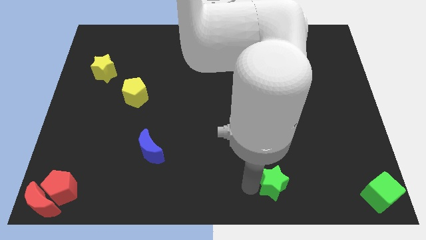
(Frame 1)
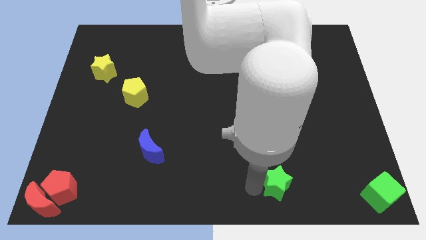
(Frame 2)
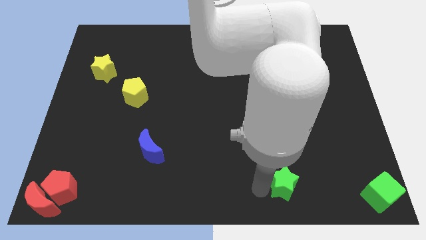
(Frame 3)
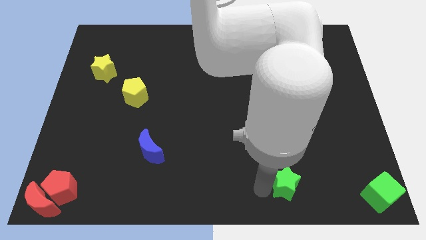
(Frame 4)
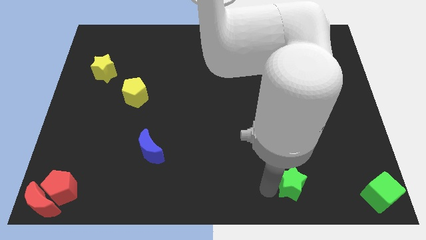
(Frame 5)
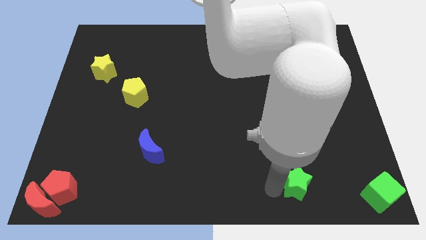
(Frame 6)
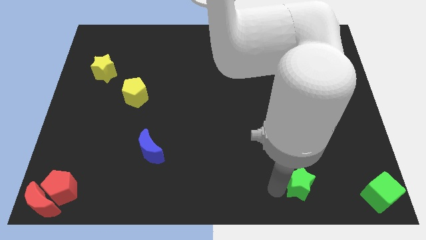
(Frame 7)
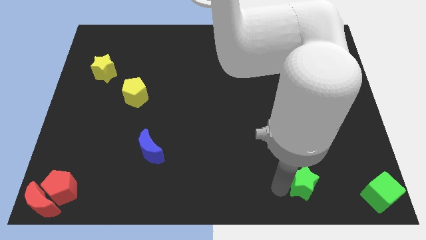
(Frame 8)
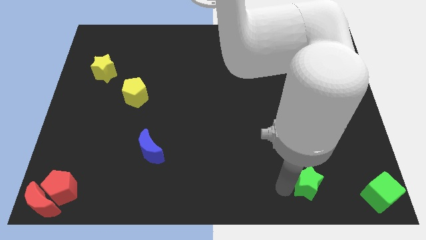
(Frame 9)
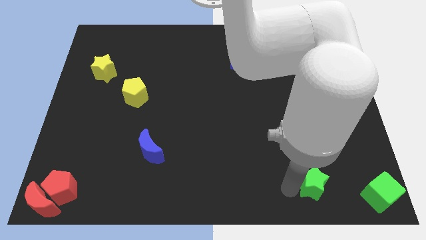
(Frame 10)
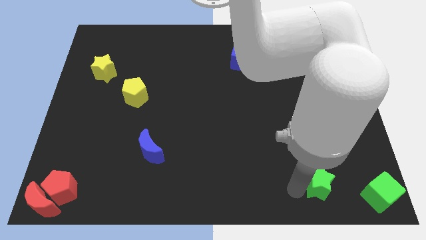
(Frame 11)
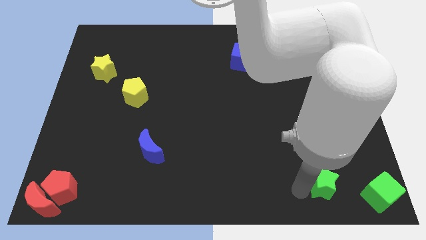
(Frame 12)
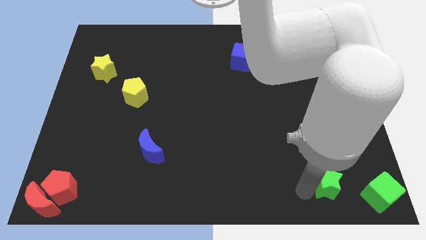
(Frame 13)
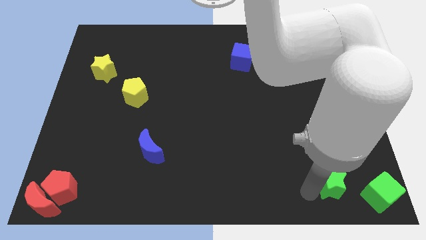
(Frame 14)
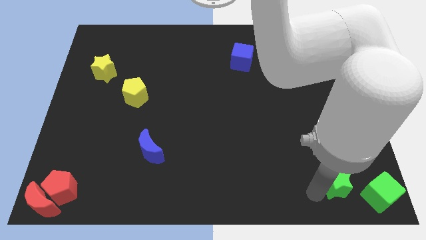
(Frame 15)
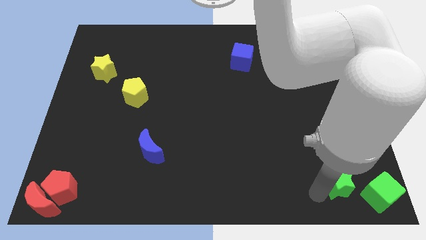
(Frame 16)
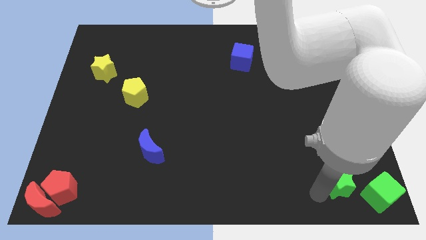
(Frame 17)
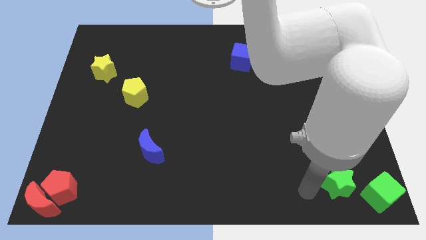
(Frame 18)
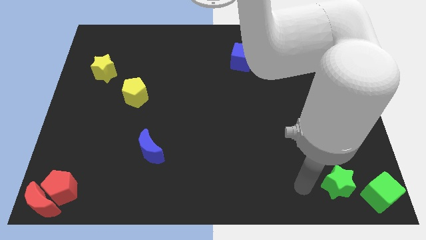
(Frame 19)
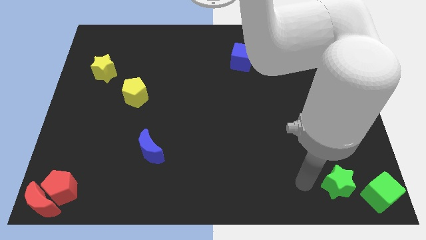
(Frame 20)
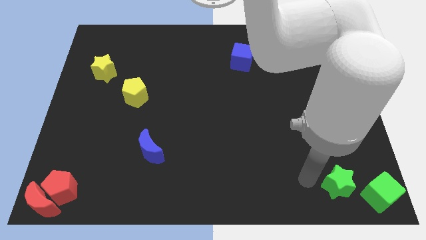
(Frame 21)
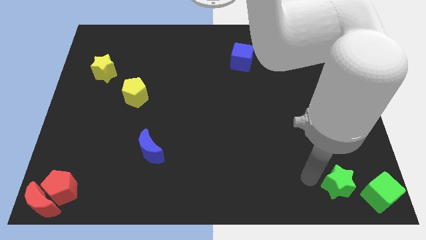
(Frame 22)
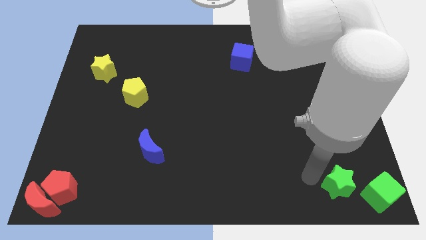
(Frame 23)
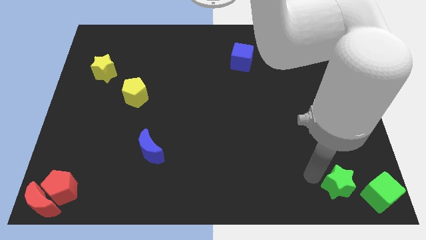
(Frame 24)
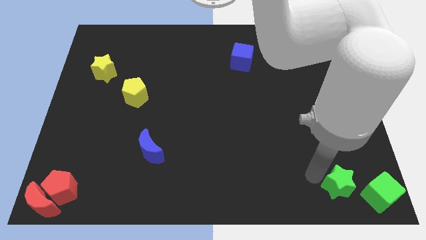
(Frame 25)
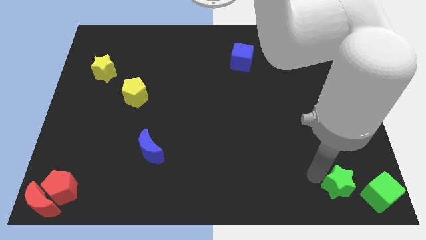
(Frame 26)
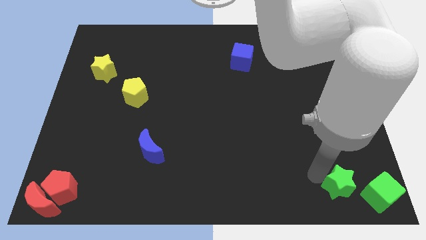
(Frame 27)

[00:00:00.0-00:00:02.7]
place the green star to the left side of the green cube

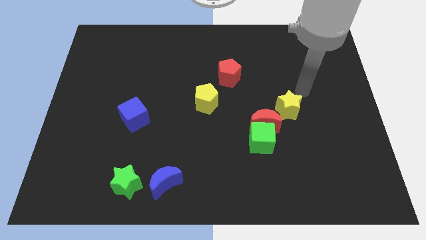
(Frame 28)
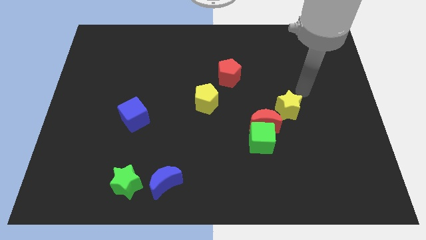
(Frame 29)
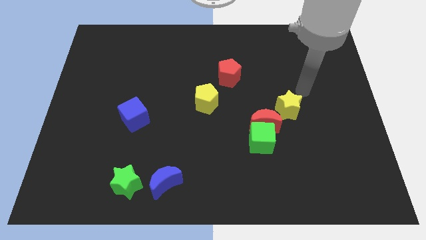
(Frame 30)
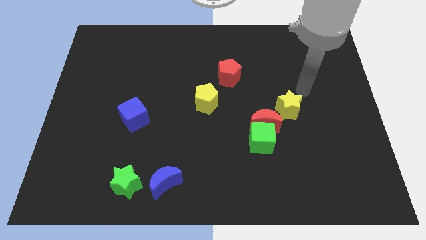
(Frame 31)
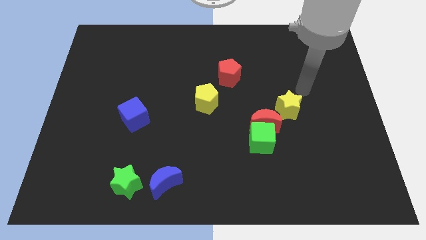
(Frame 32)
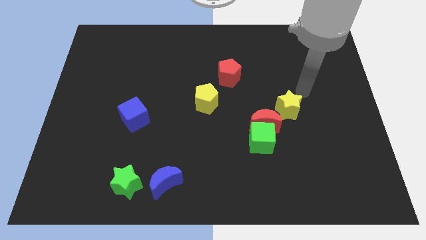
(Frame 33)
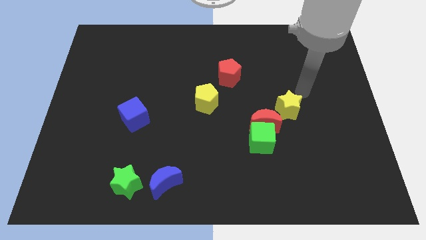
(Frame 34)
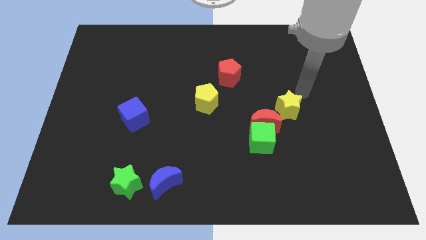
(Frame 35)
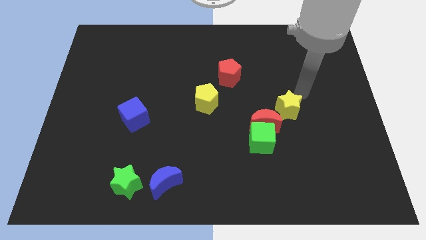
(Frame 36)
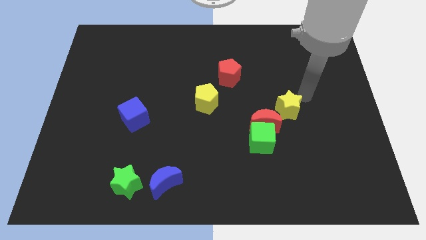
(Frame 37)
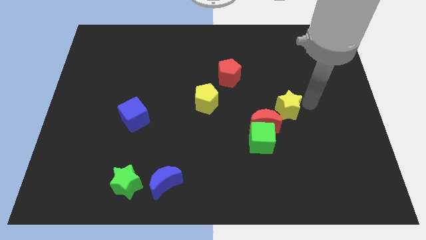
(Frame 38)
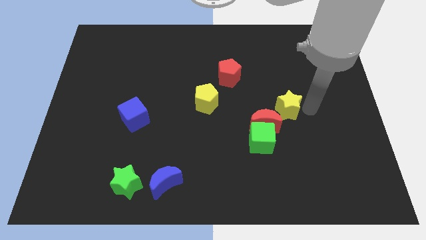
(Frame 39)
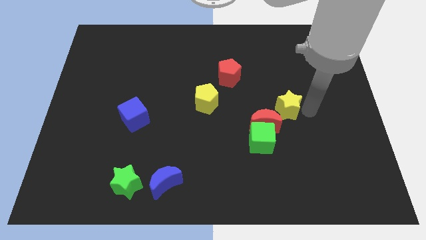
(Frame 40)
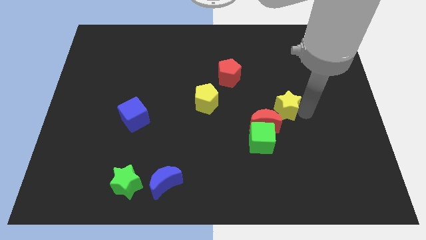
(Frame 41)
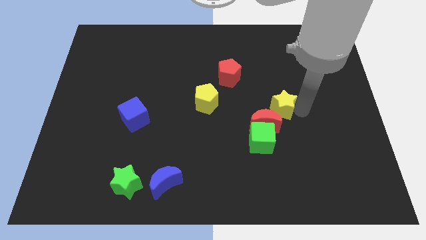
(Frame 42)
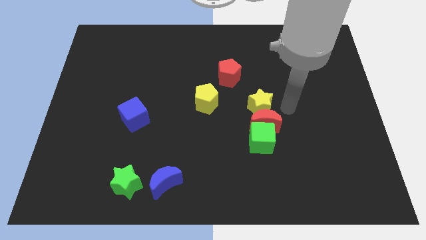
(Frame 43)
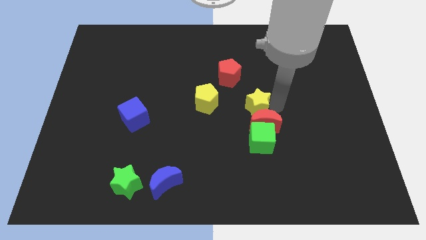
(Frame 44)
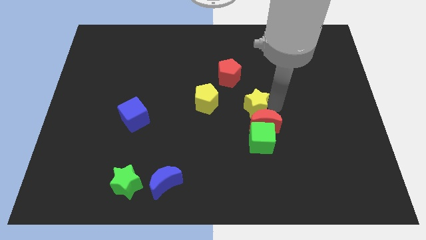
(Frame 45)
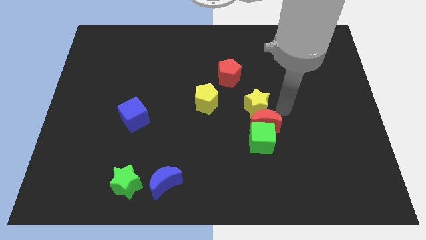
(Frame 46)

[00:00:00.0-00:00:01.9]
place the yellow star to the top of the red crescent

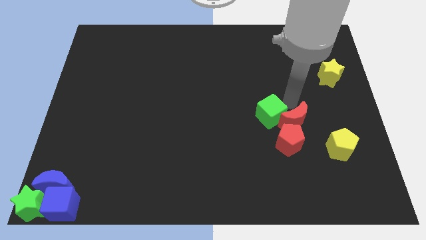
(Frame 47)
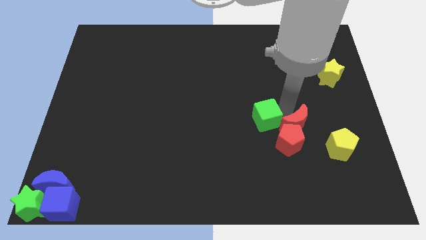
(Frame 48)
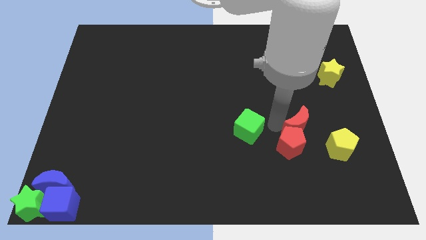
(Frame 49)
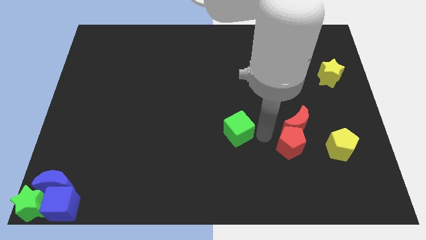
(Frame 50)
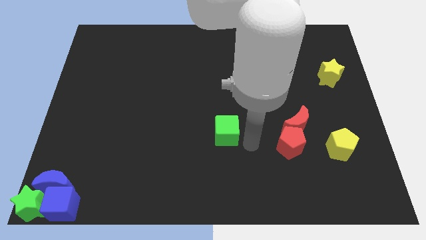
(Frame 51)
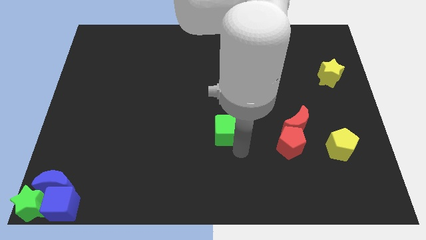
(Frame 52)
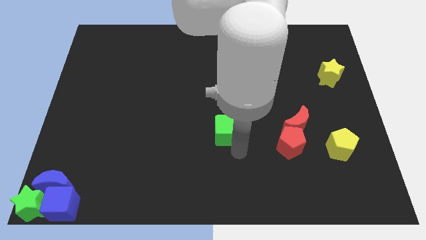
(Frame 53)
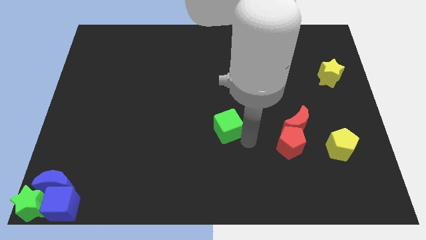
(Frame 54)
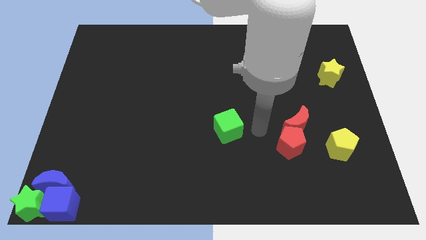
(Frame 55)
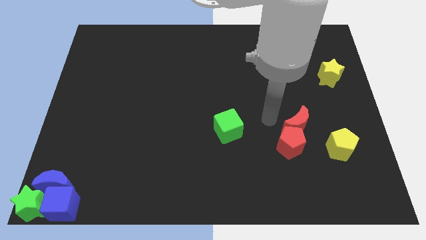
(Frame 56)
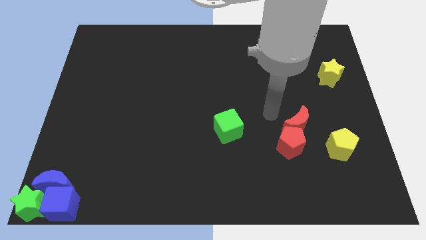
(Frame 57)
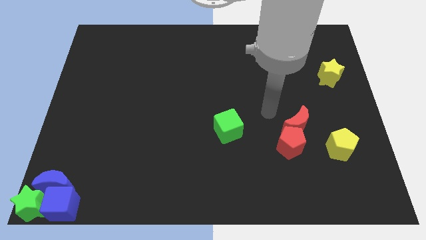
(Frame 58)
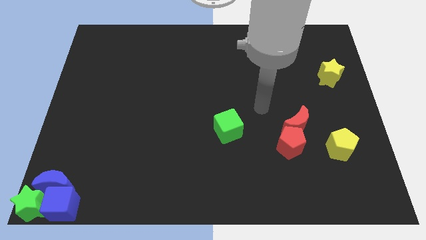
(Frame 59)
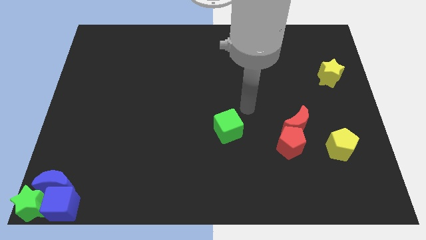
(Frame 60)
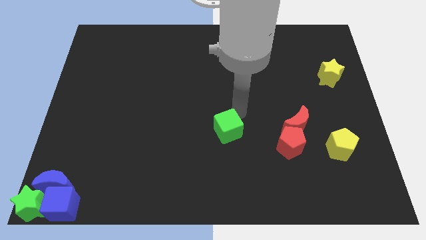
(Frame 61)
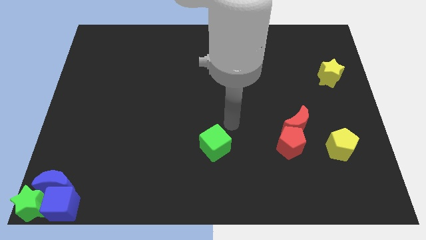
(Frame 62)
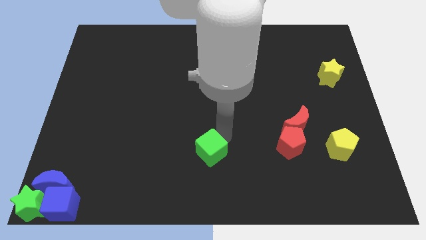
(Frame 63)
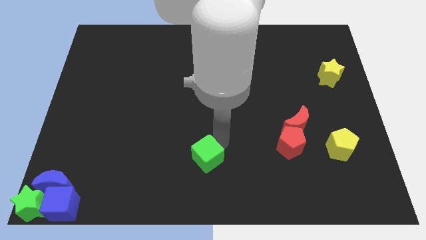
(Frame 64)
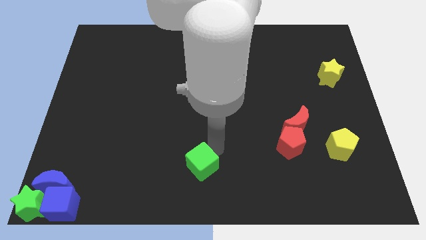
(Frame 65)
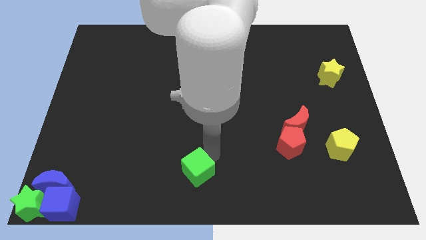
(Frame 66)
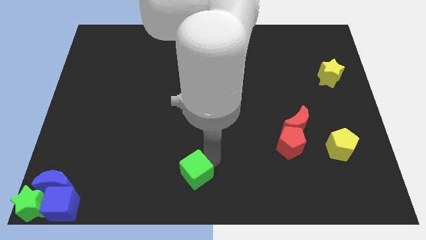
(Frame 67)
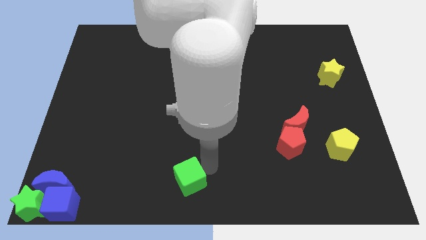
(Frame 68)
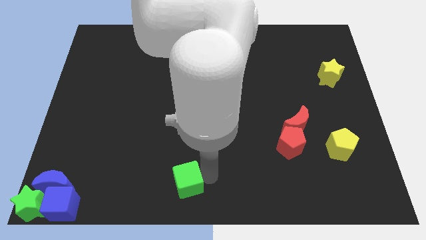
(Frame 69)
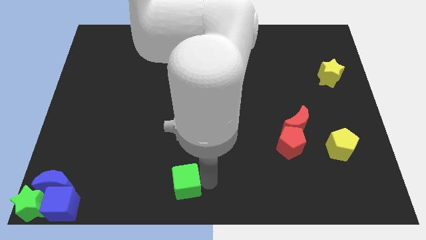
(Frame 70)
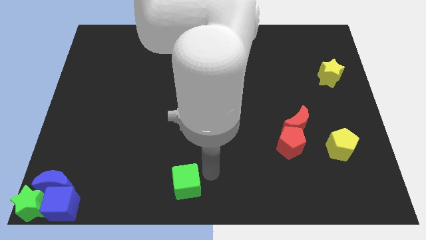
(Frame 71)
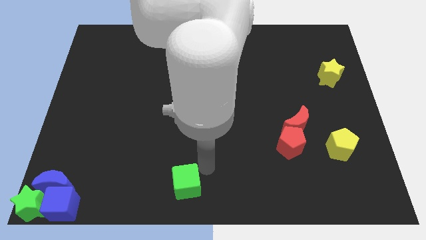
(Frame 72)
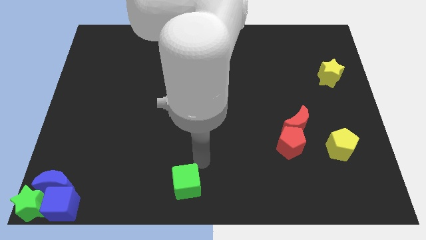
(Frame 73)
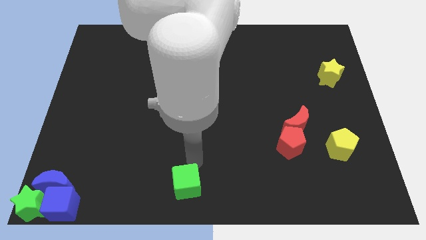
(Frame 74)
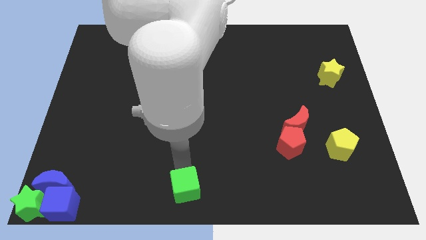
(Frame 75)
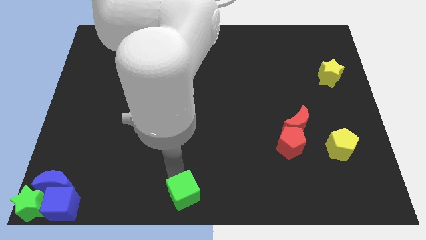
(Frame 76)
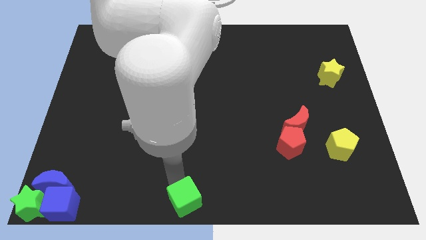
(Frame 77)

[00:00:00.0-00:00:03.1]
place the green cube to the bottom center of the board

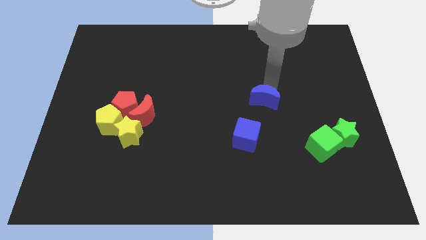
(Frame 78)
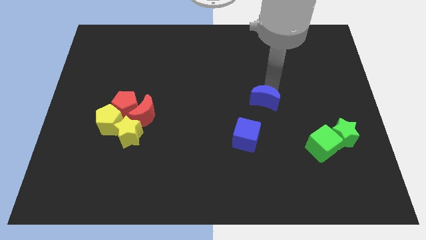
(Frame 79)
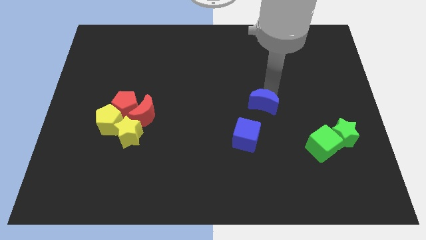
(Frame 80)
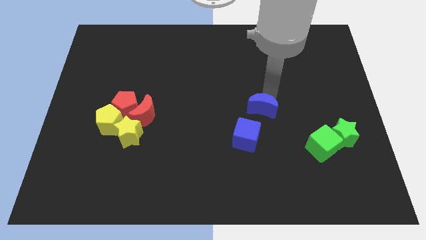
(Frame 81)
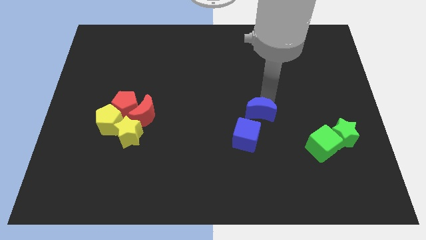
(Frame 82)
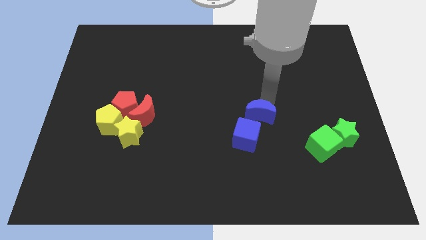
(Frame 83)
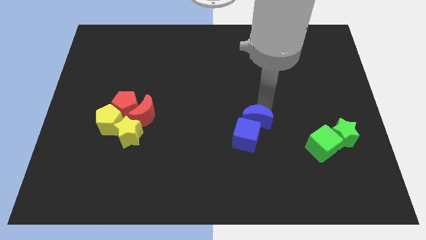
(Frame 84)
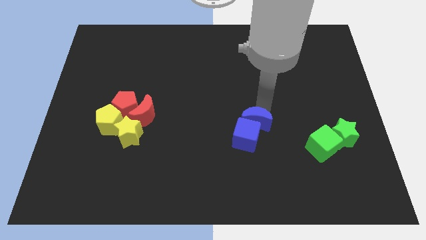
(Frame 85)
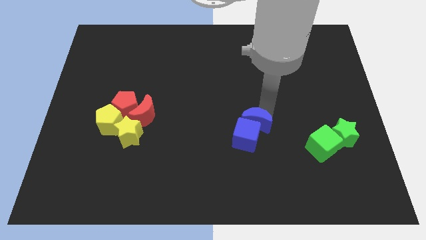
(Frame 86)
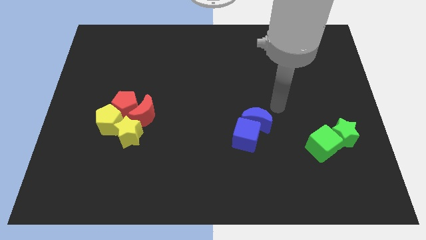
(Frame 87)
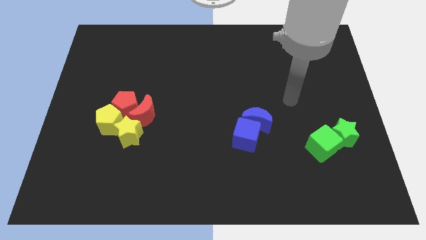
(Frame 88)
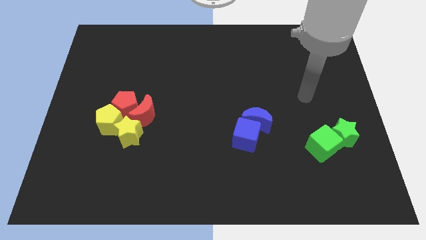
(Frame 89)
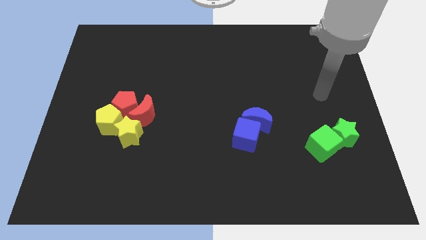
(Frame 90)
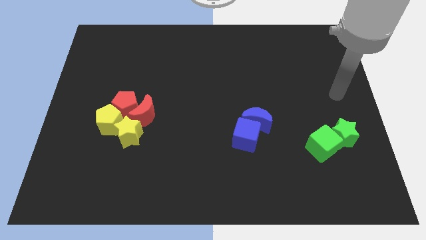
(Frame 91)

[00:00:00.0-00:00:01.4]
move the blue crescent towards the blue cube
